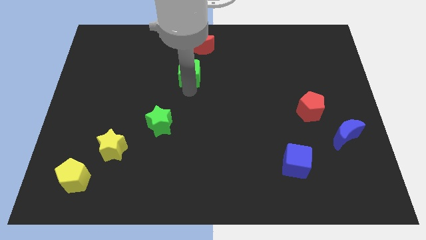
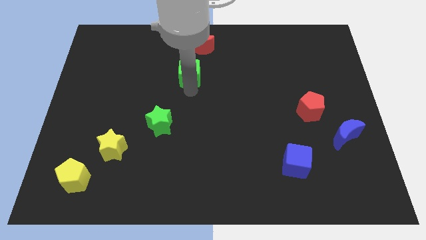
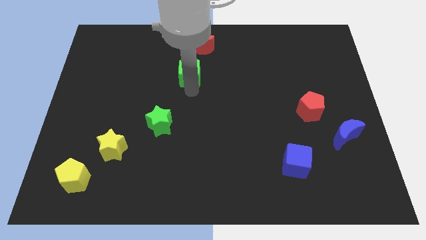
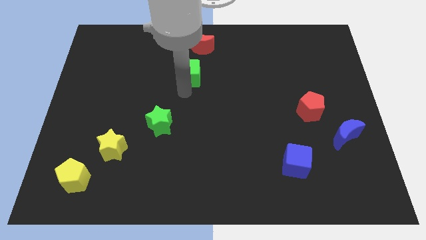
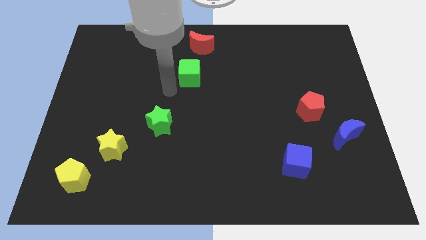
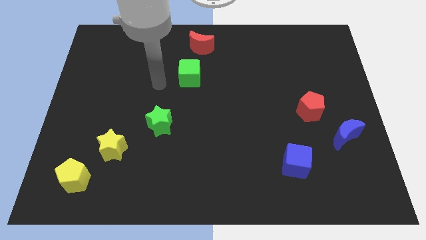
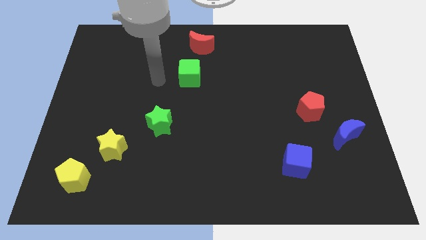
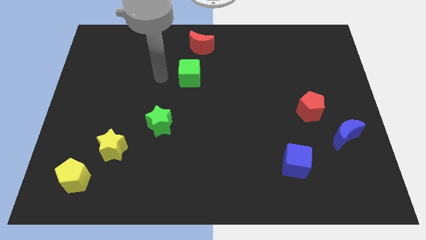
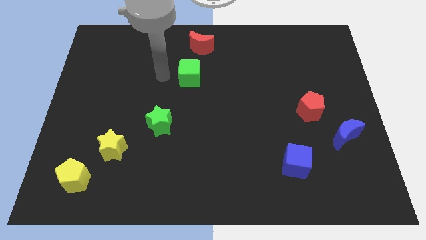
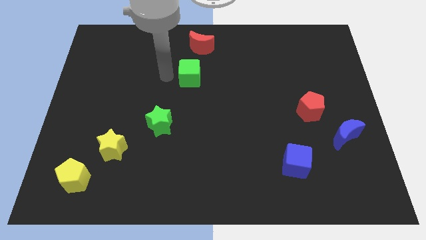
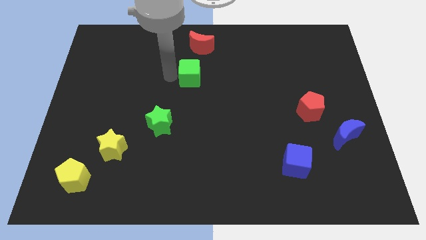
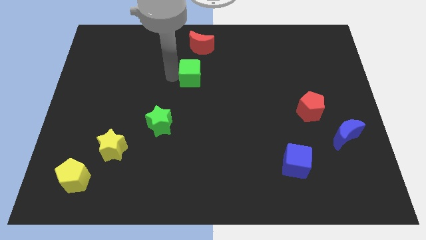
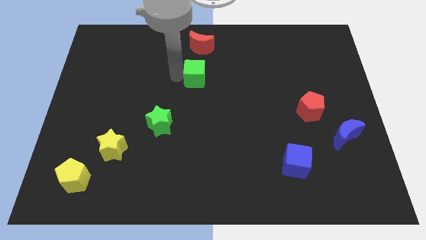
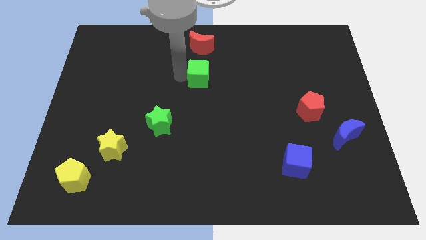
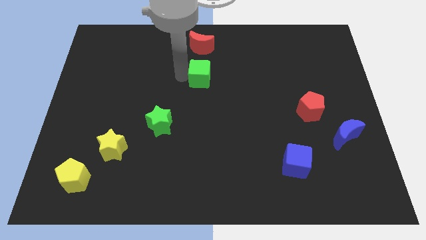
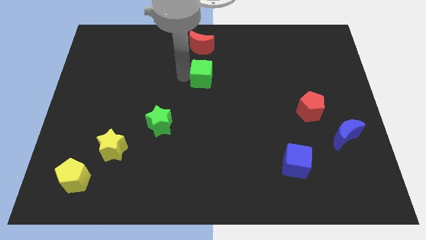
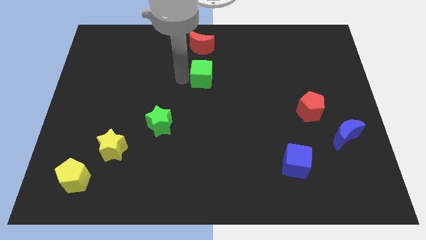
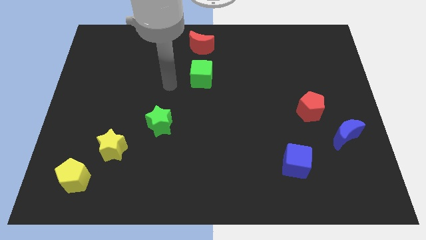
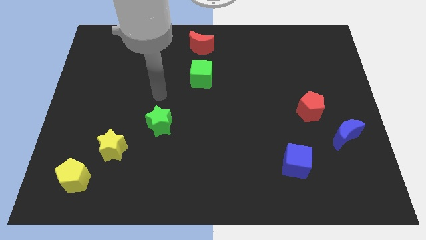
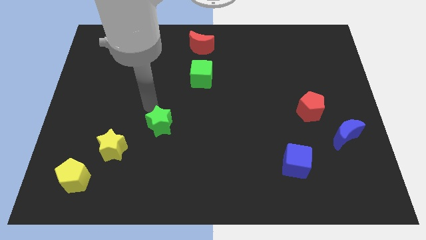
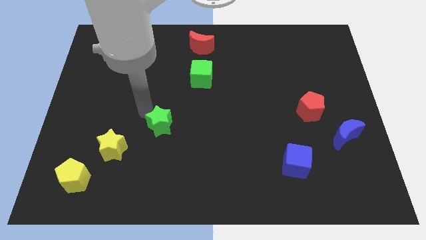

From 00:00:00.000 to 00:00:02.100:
adjust the green cube vertically below the red crescent

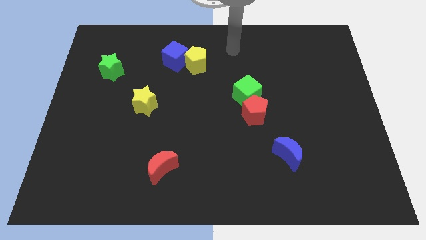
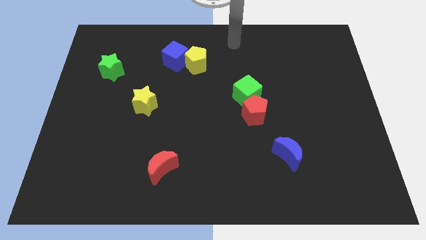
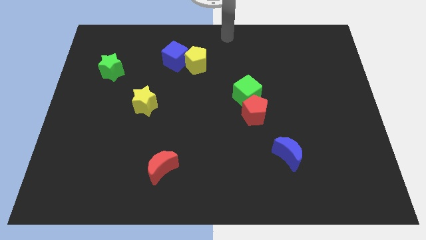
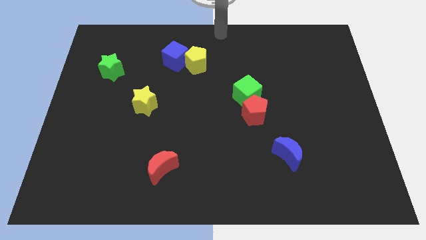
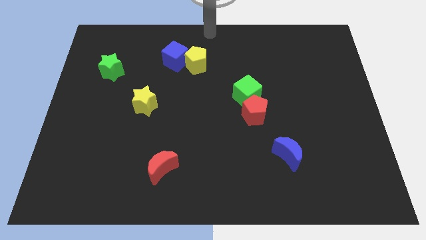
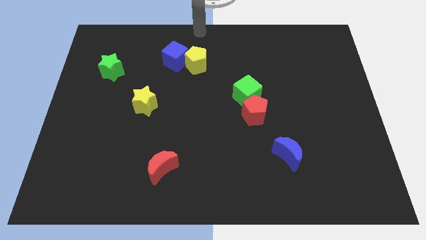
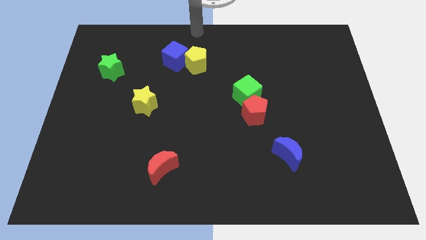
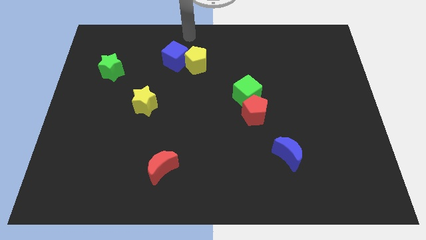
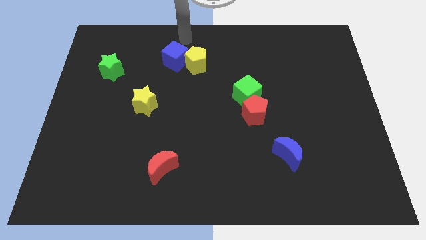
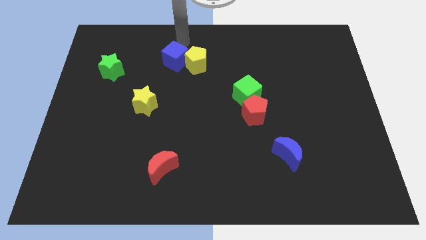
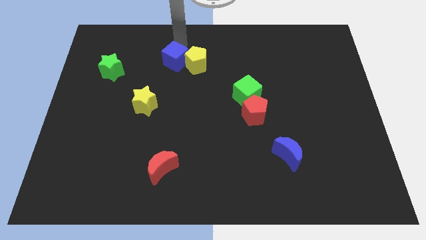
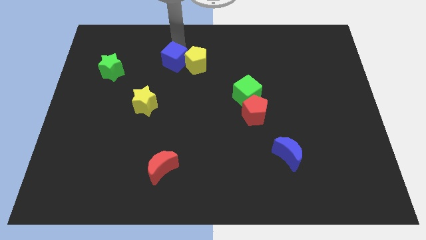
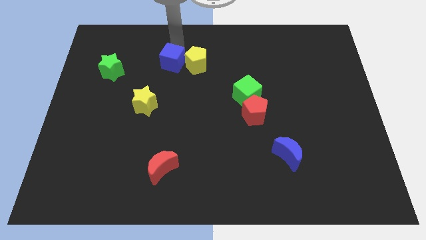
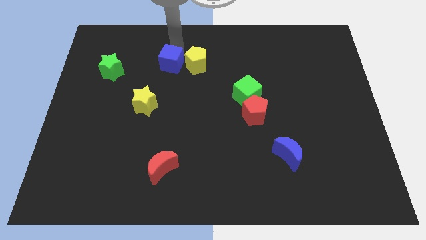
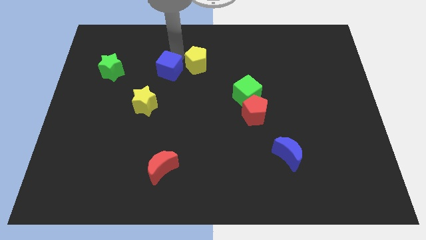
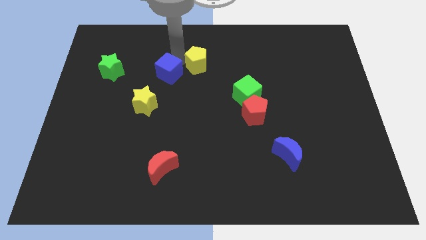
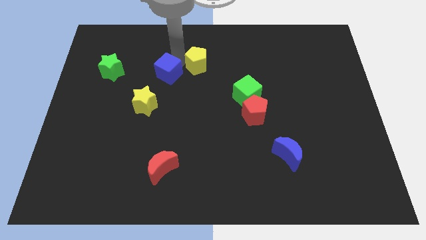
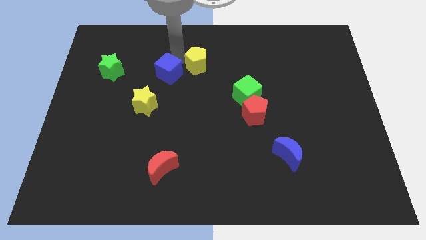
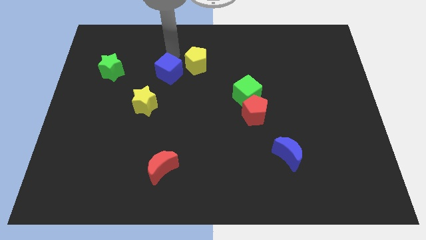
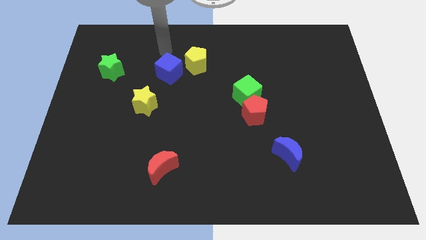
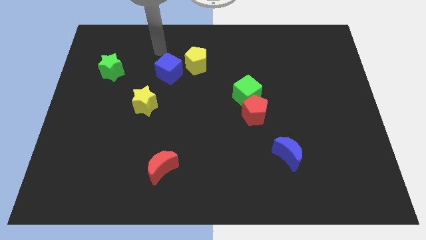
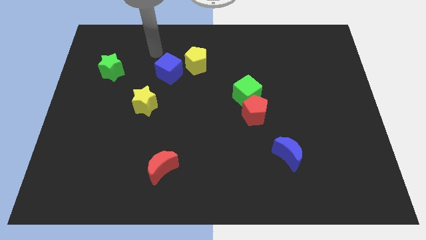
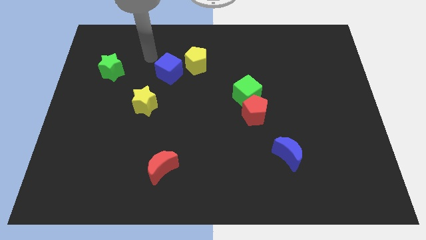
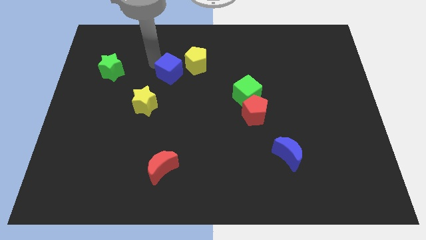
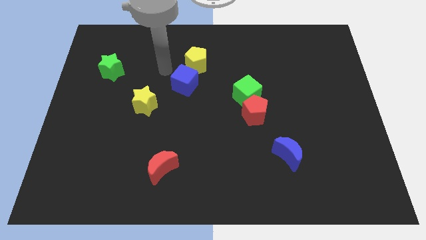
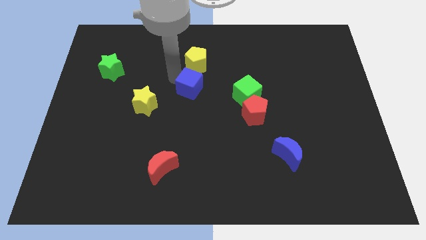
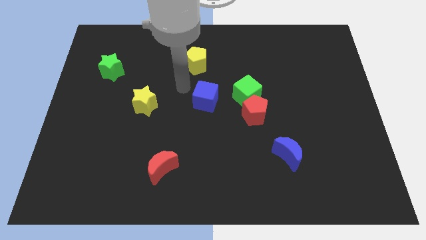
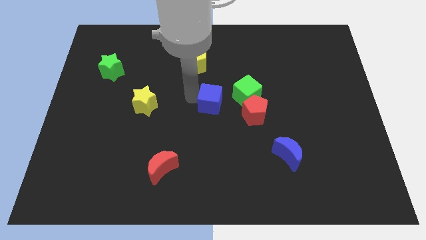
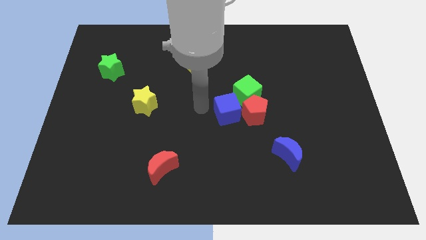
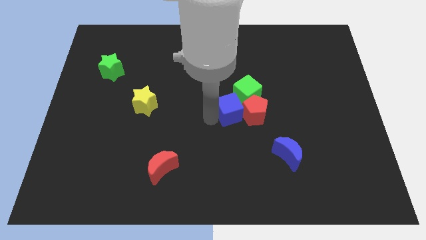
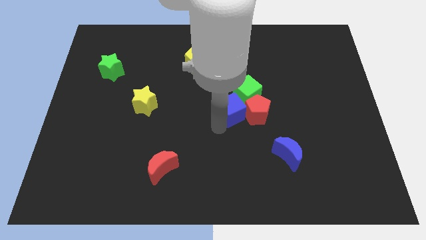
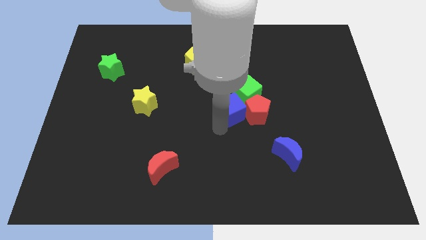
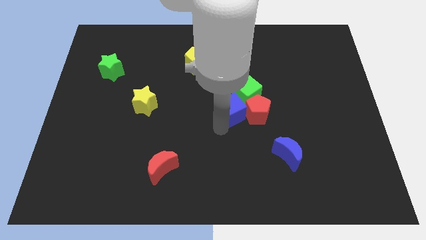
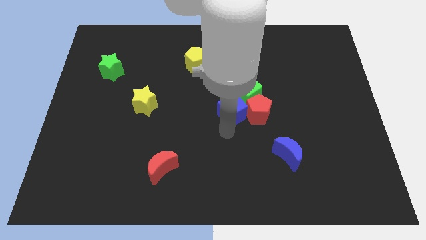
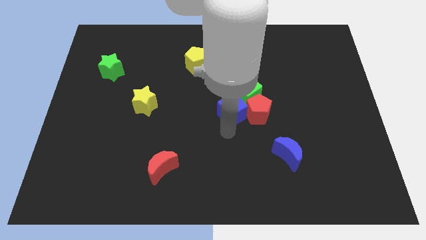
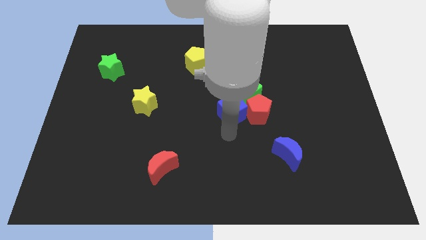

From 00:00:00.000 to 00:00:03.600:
place the blue cube left to the red pentagon

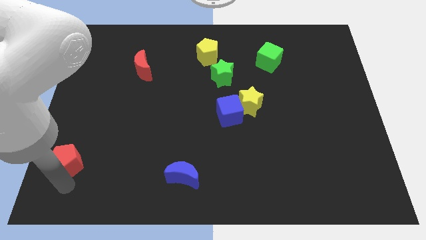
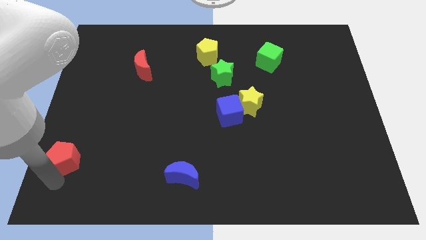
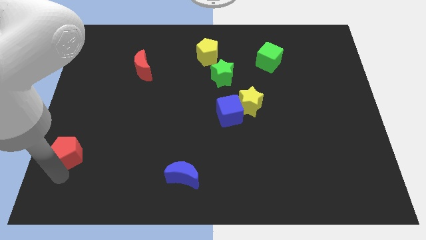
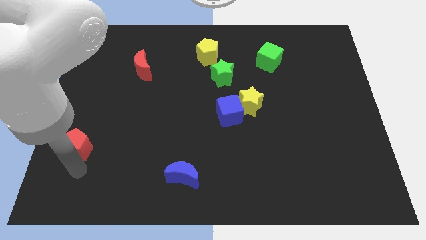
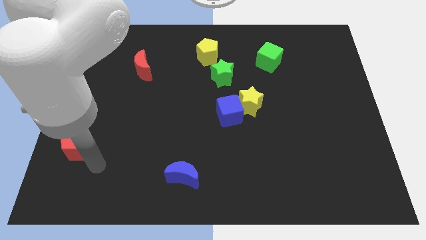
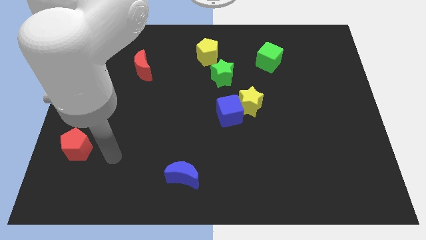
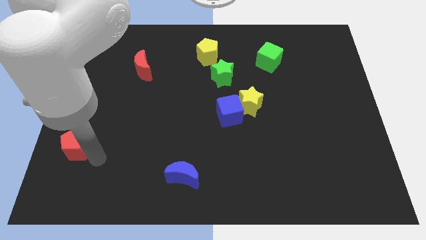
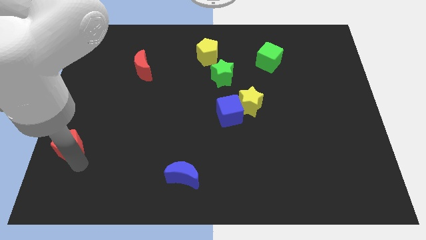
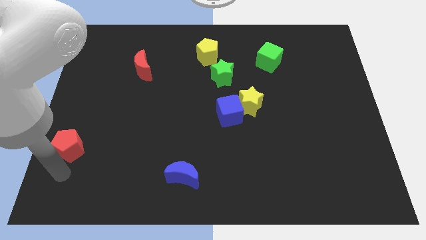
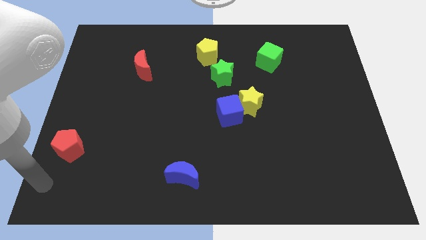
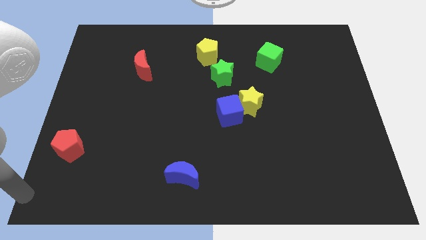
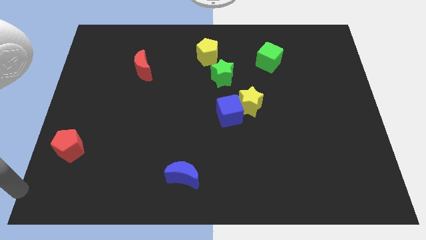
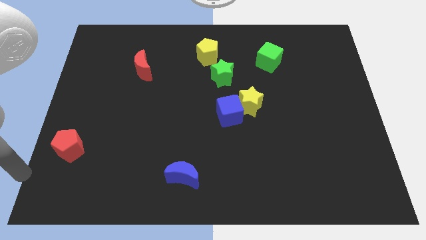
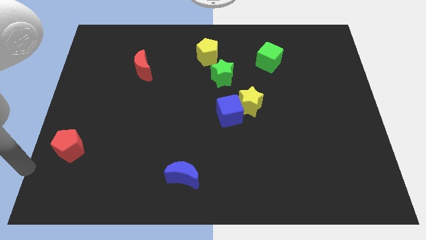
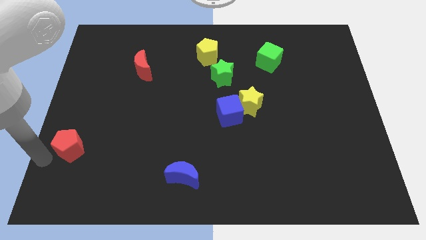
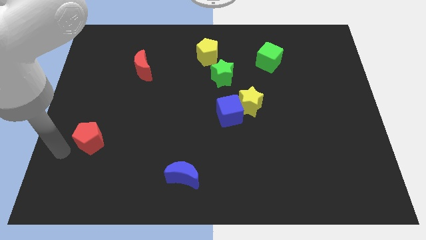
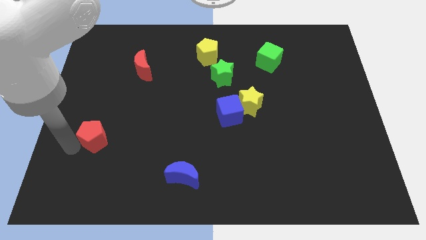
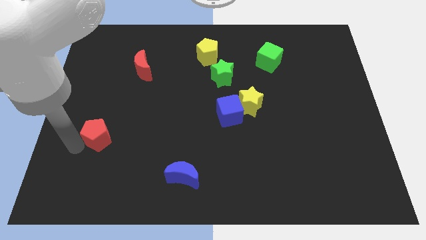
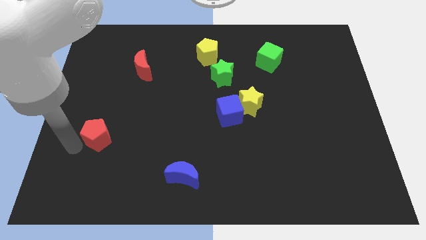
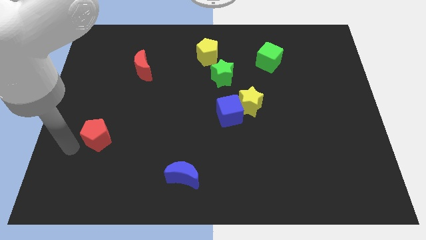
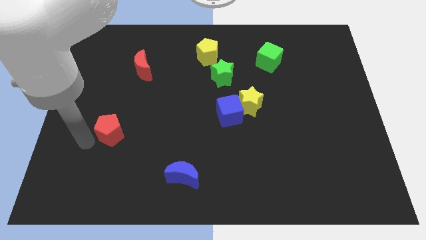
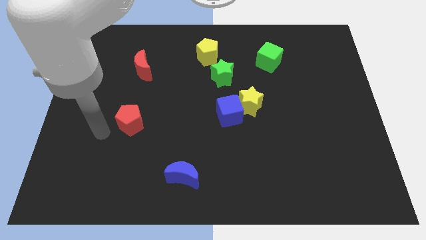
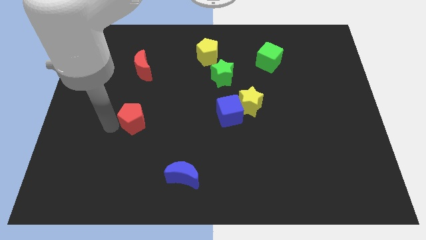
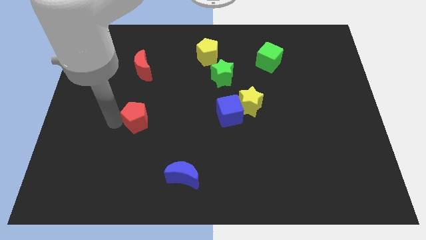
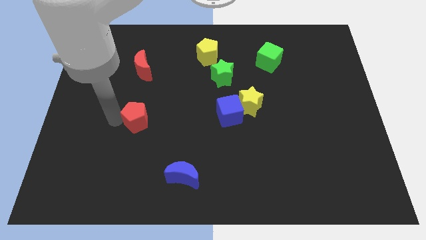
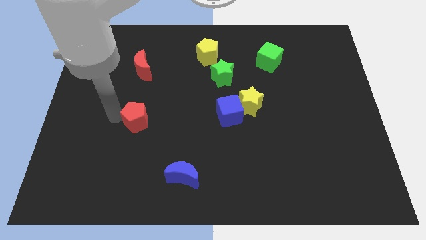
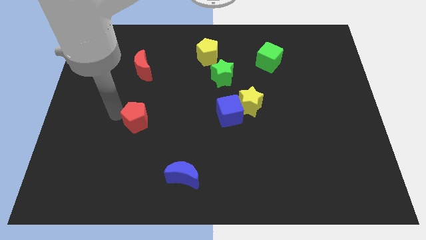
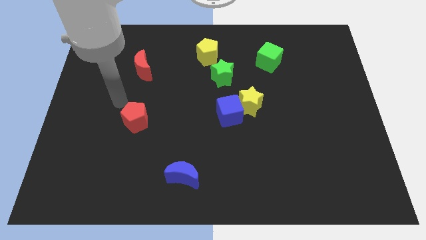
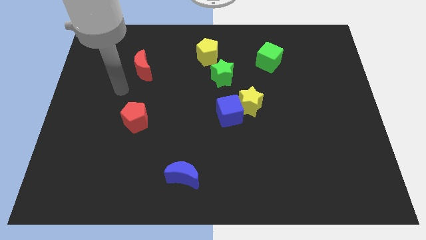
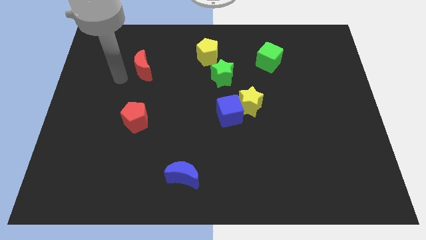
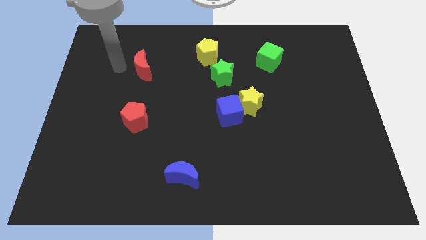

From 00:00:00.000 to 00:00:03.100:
place red pentagon parallel to blue cube
